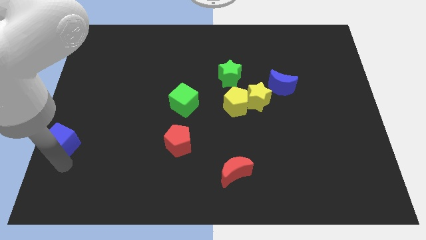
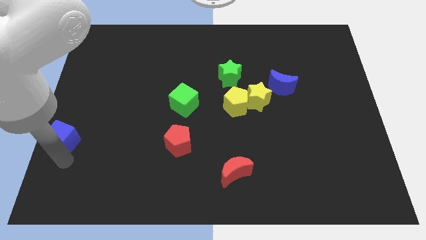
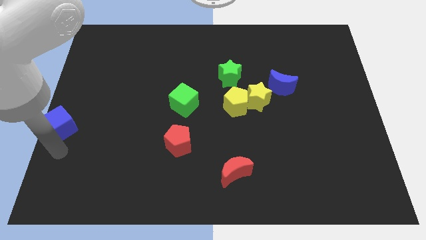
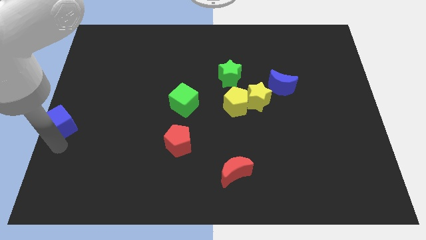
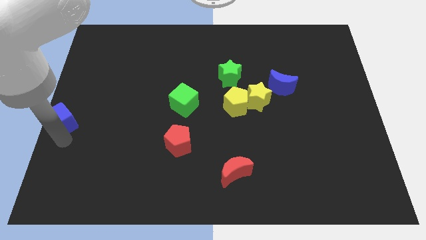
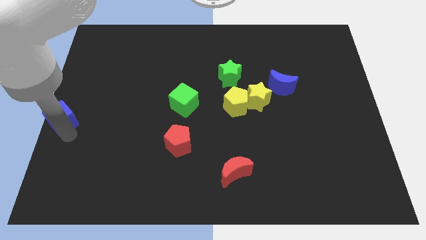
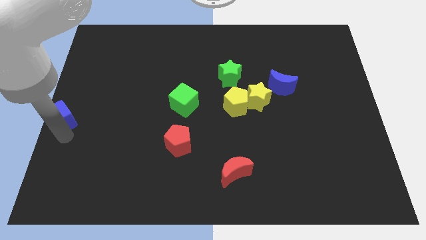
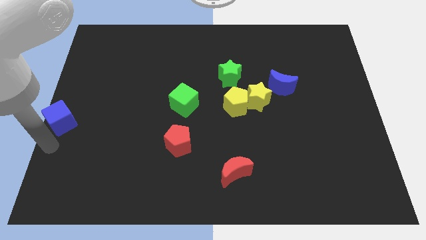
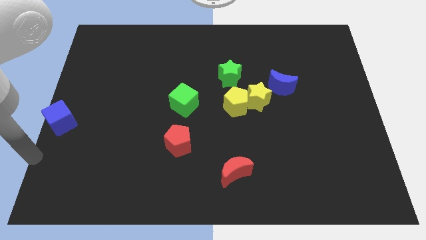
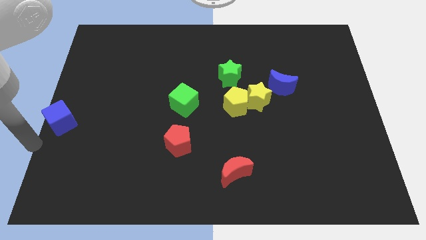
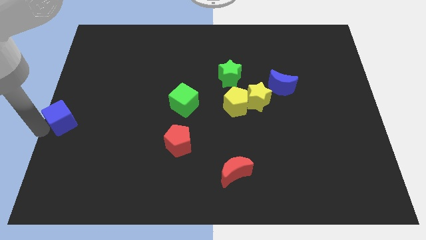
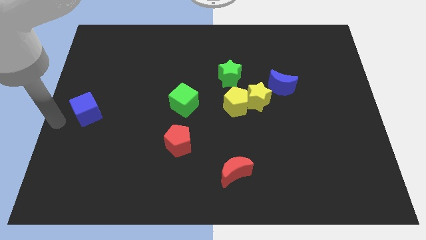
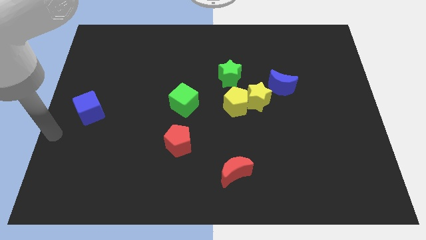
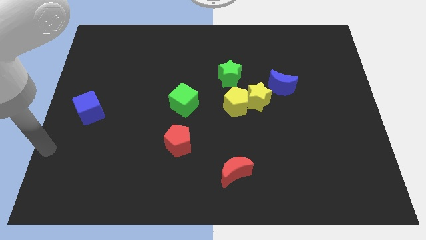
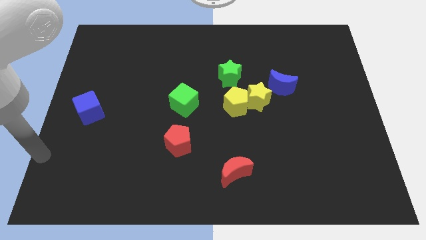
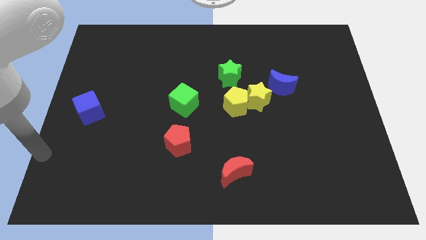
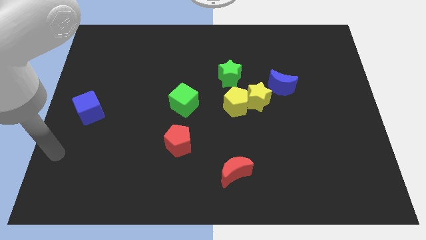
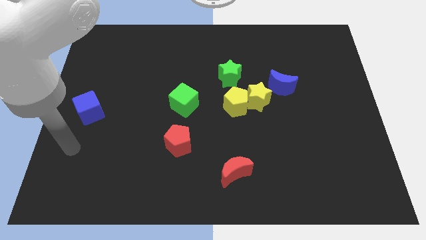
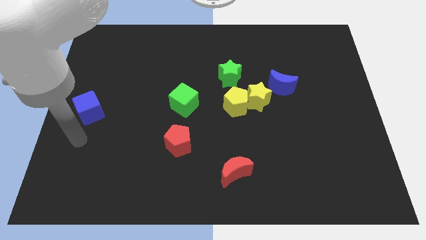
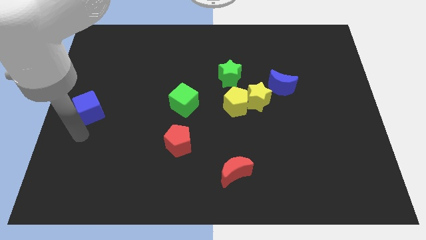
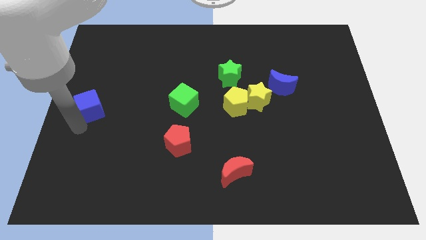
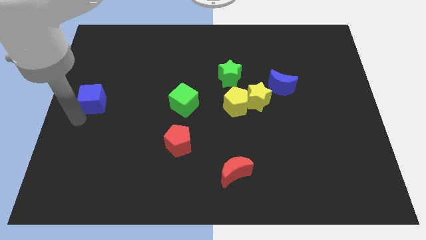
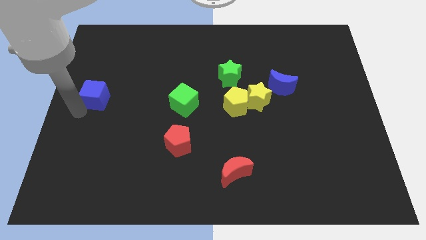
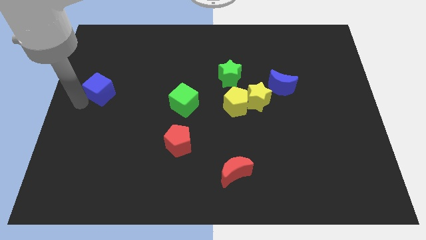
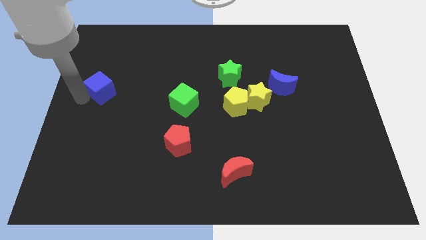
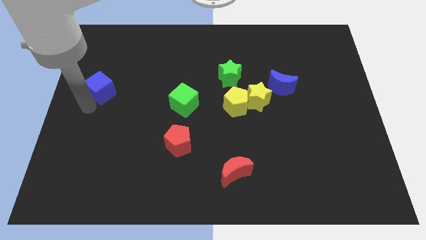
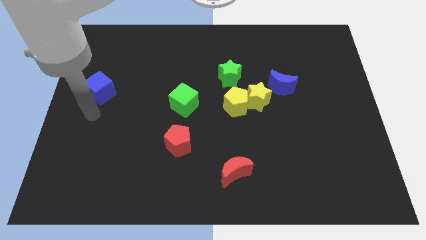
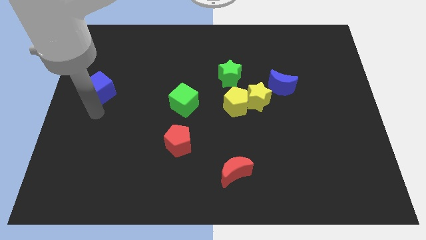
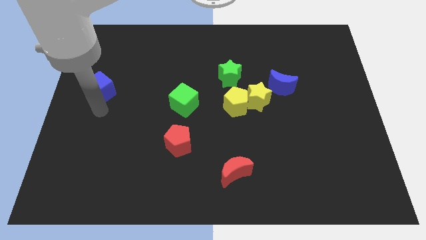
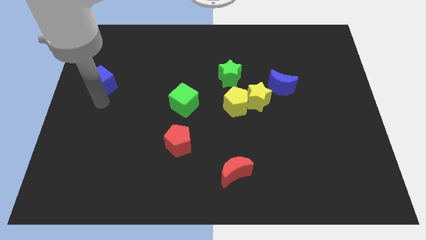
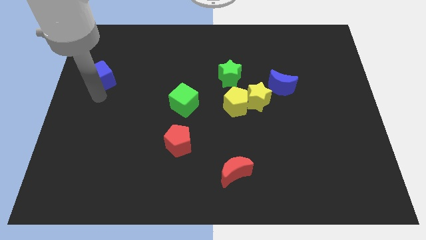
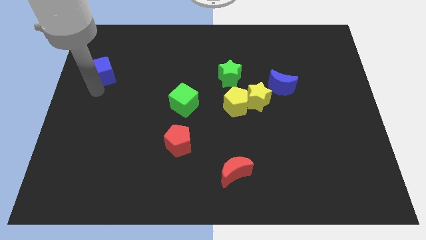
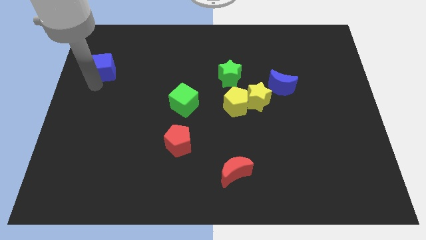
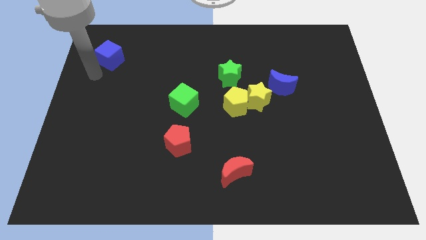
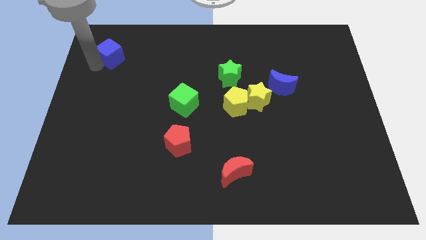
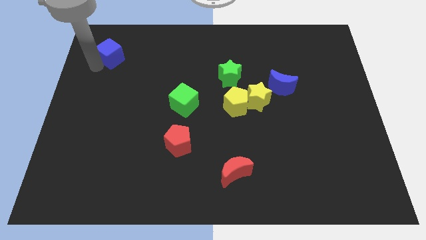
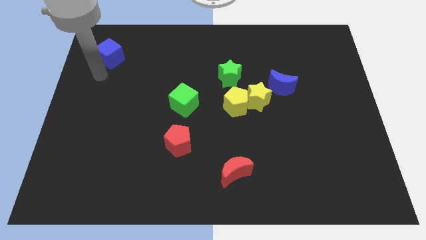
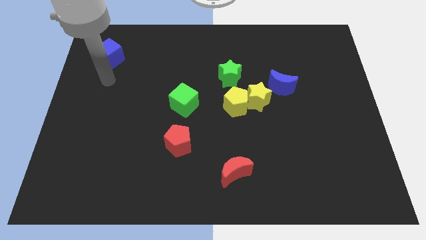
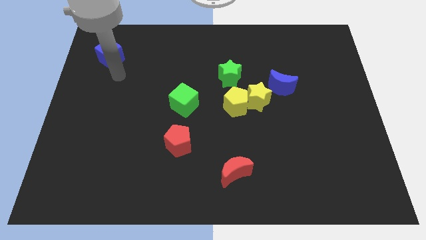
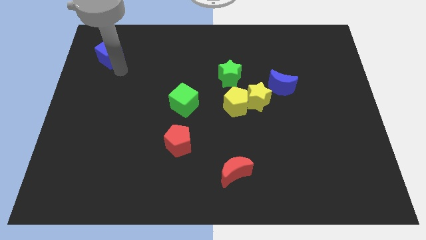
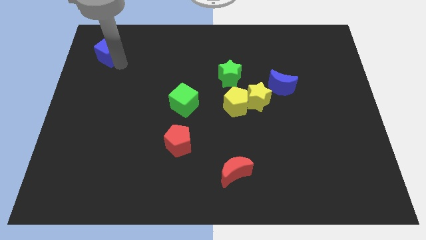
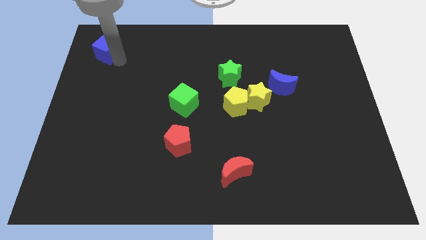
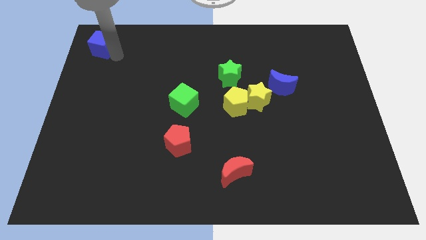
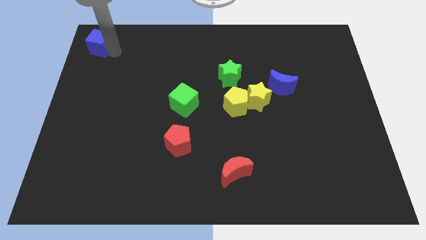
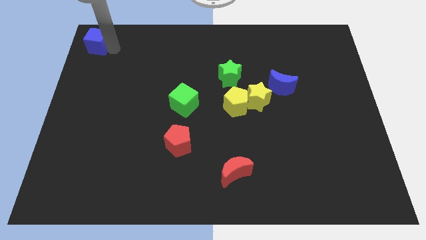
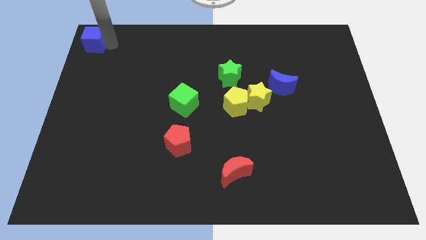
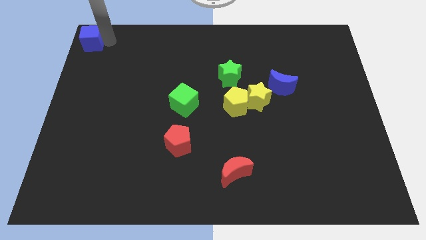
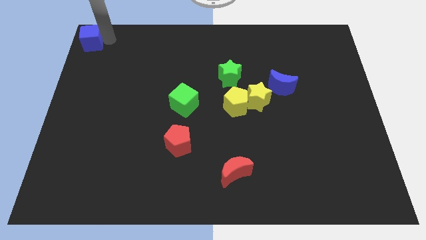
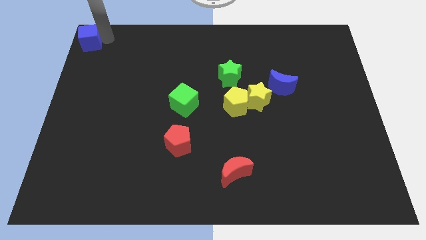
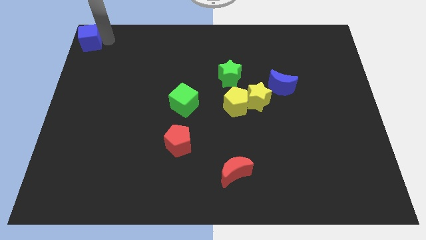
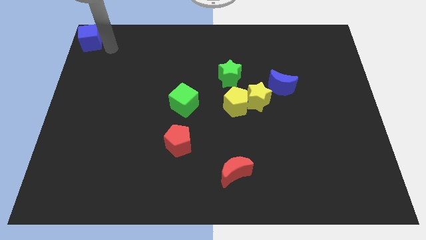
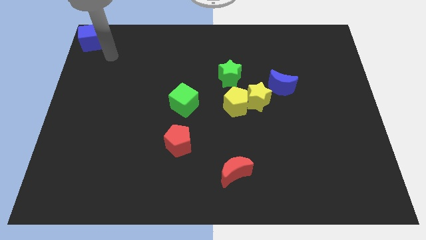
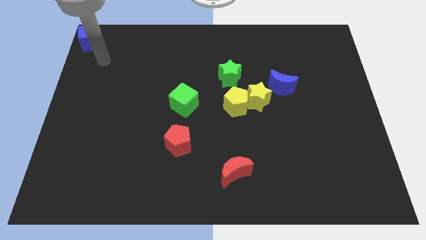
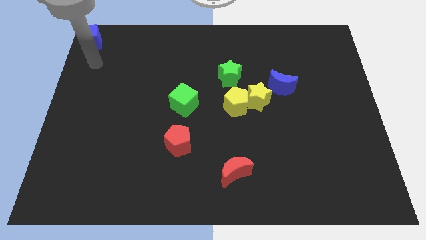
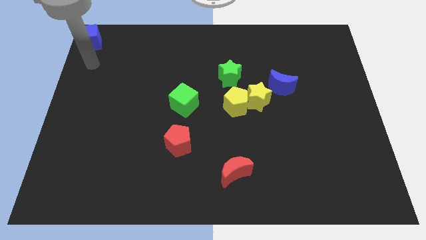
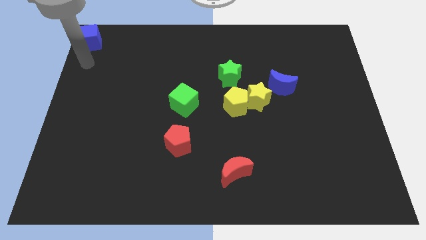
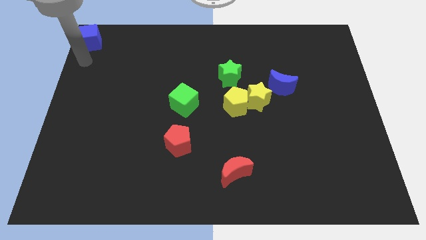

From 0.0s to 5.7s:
move the blue cube towards the top left side of the board

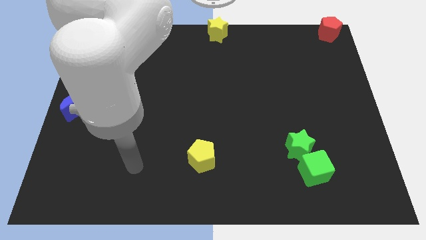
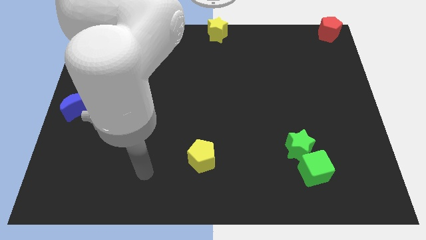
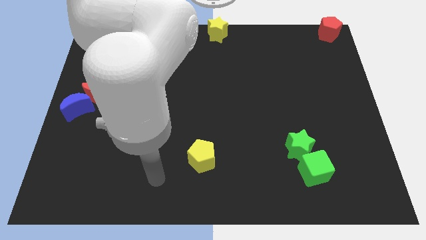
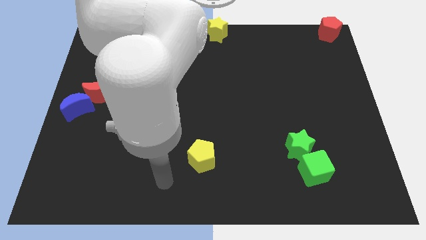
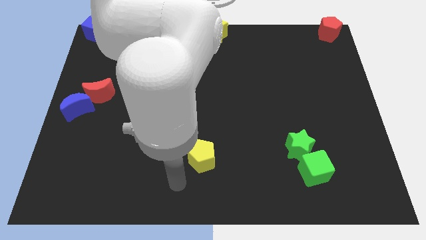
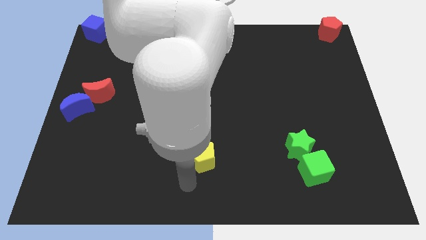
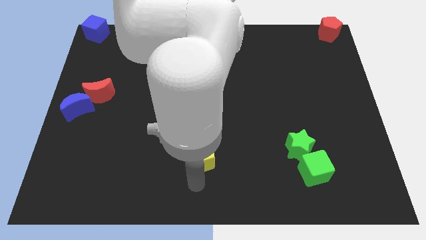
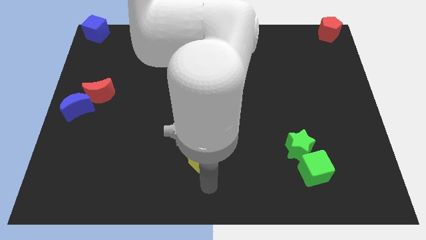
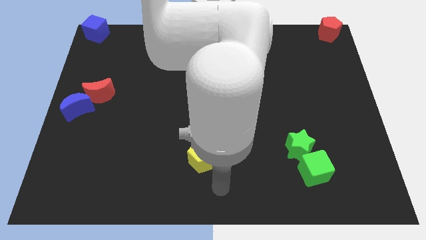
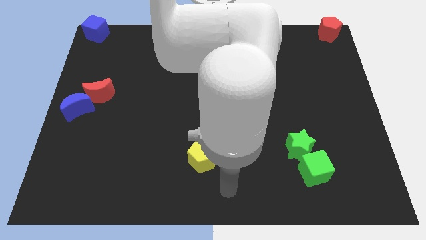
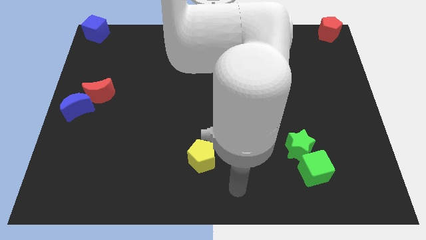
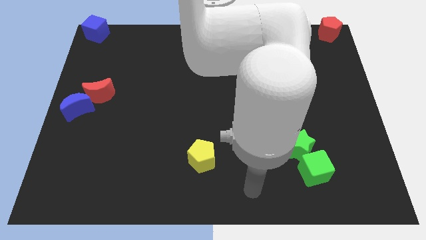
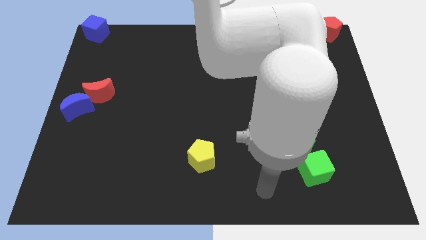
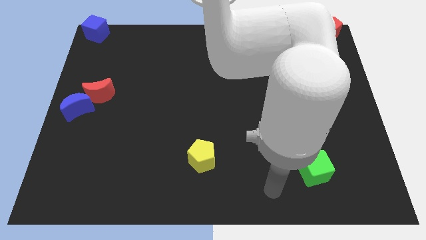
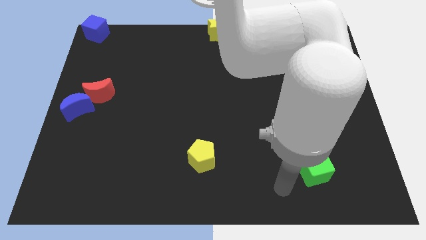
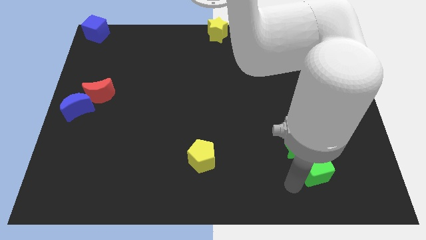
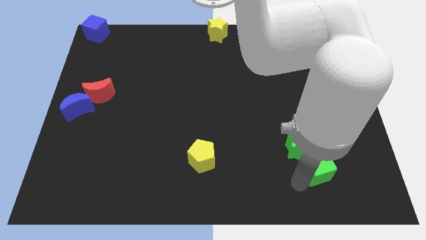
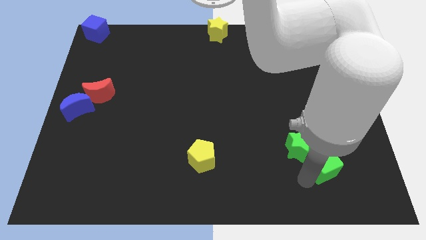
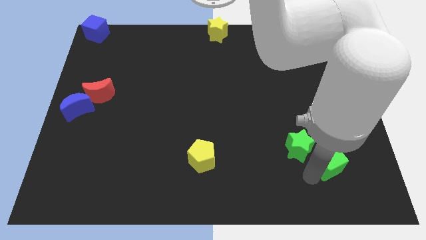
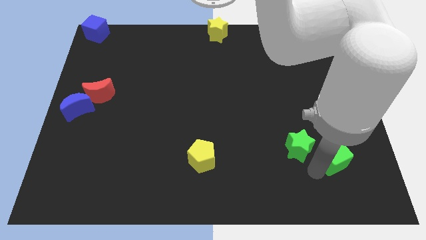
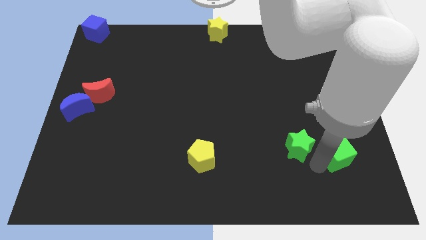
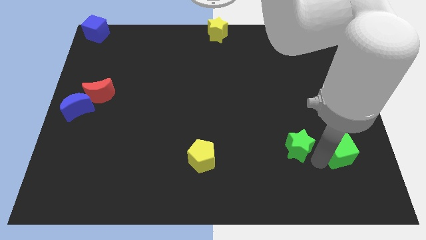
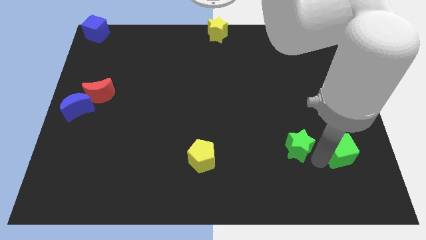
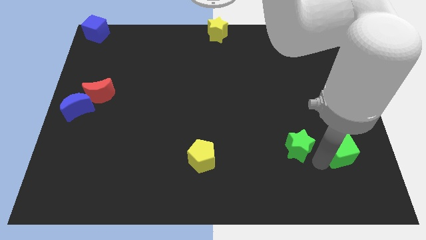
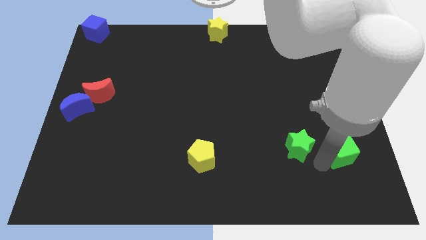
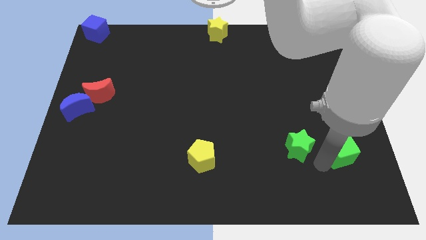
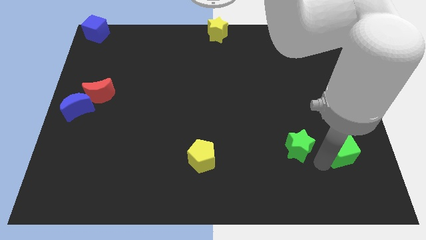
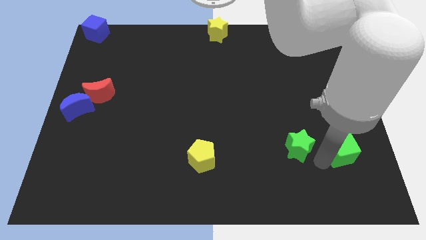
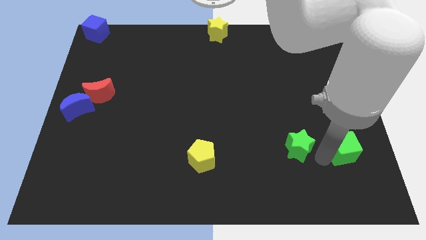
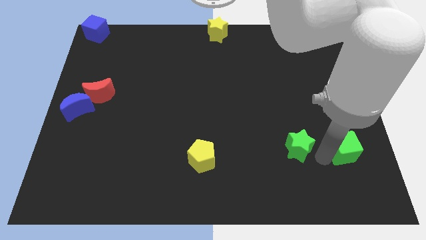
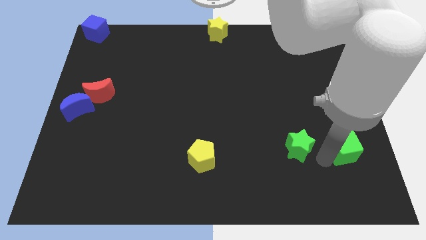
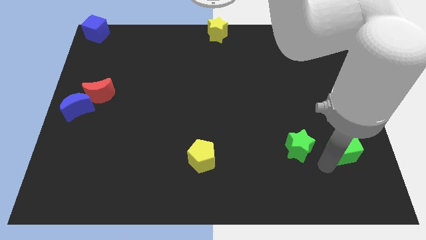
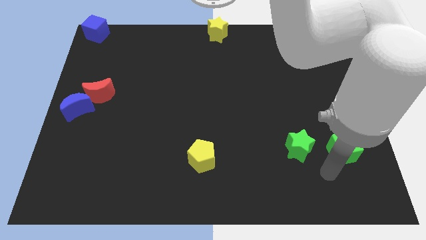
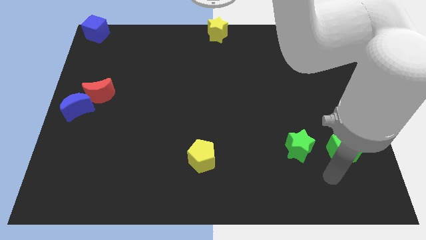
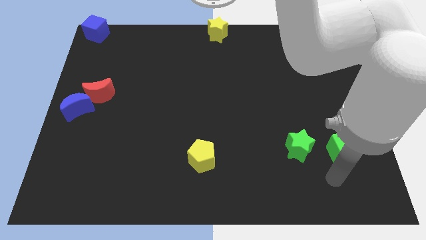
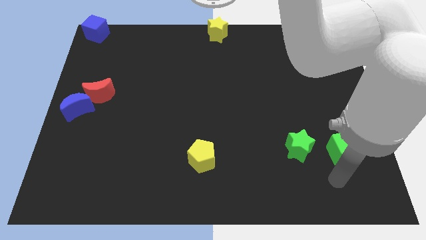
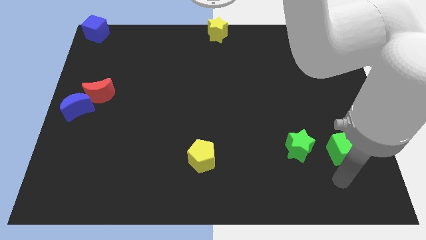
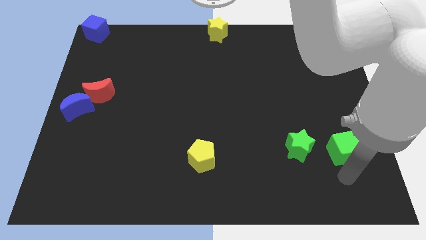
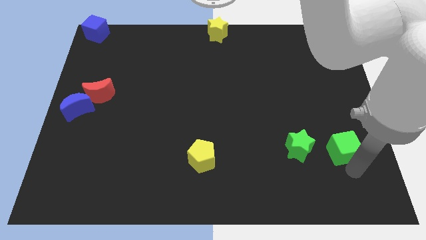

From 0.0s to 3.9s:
put the green cube to the right of the green star
